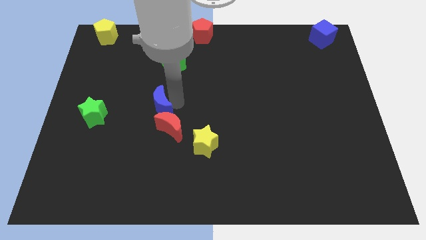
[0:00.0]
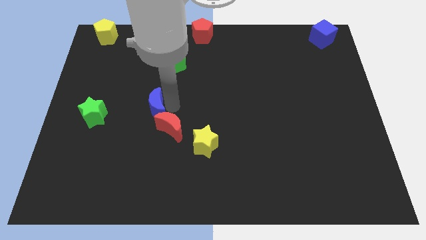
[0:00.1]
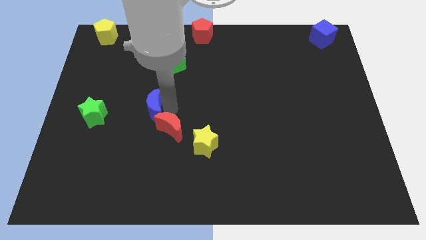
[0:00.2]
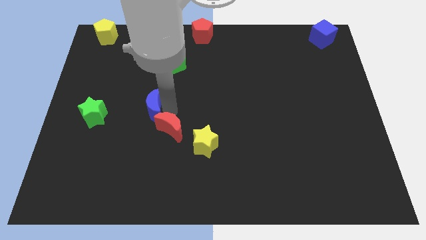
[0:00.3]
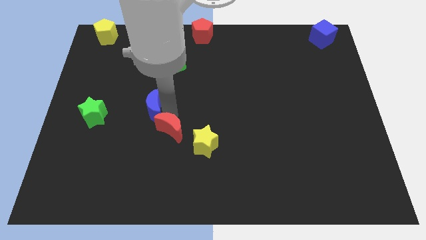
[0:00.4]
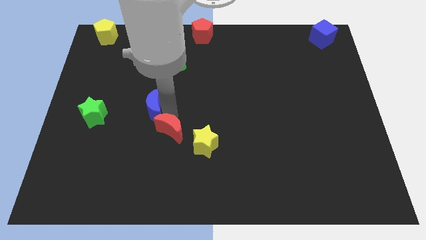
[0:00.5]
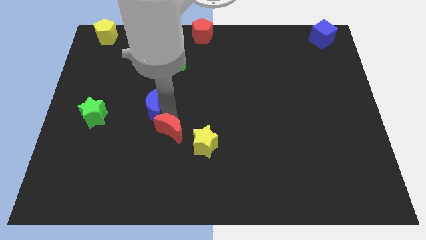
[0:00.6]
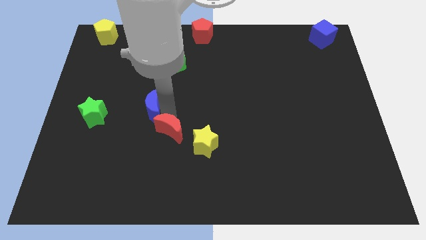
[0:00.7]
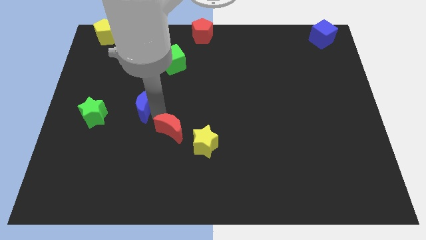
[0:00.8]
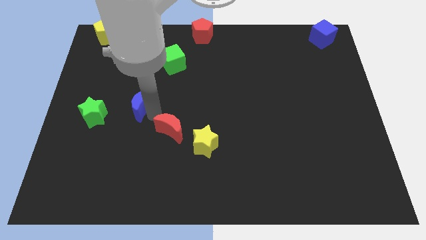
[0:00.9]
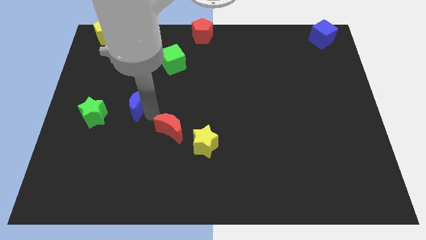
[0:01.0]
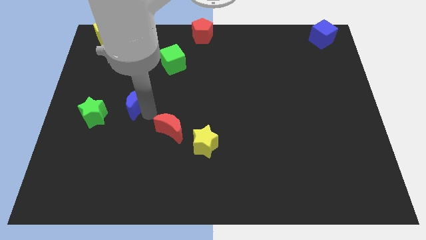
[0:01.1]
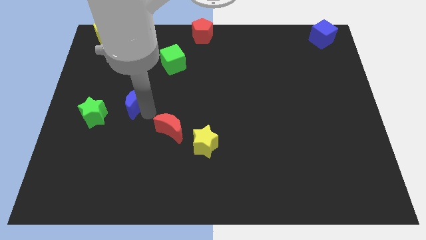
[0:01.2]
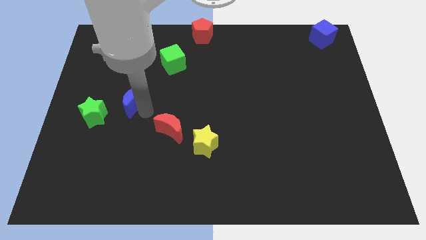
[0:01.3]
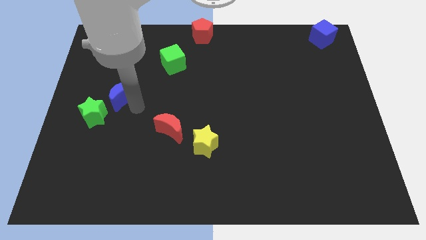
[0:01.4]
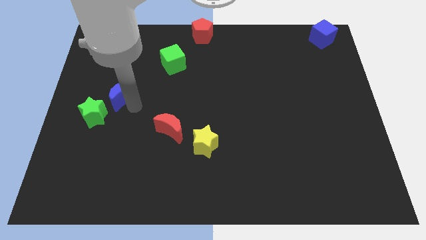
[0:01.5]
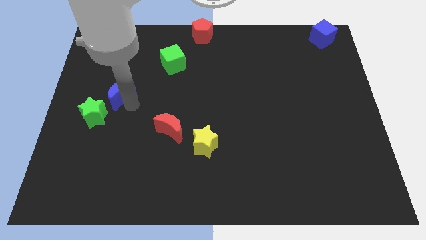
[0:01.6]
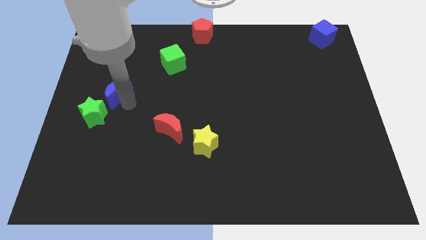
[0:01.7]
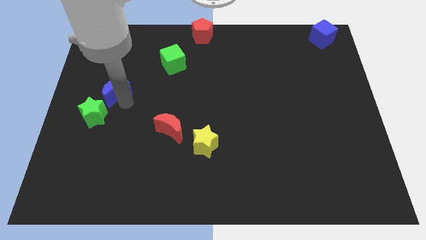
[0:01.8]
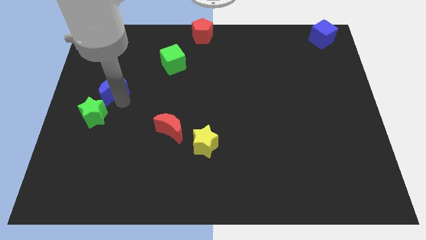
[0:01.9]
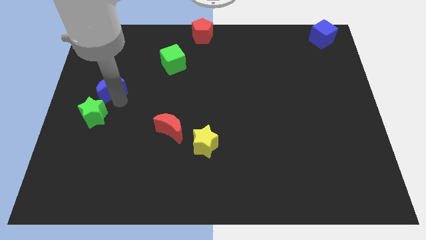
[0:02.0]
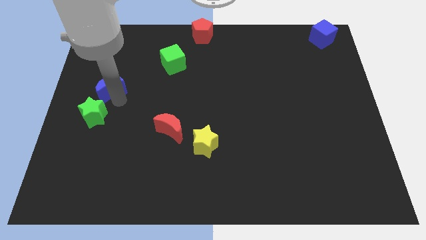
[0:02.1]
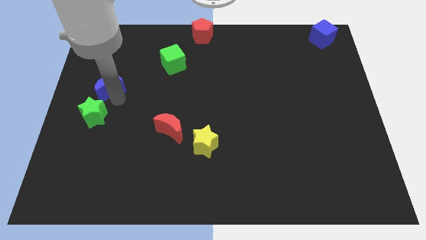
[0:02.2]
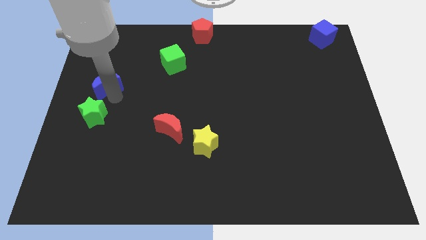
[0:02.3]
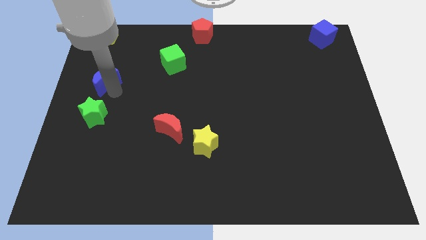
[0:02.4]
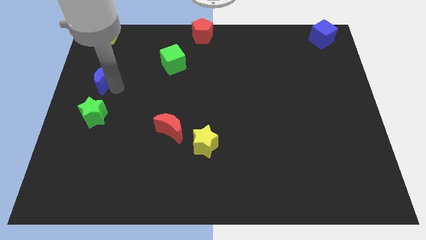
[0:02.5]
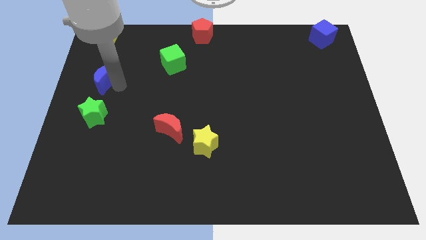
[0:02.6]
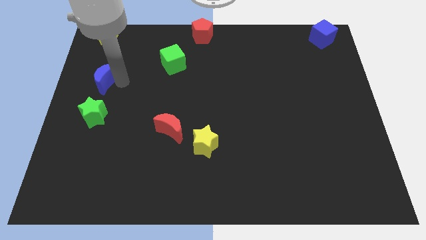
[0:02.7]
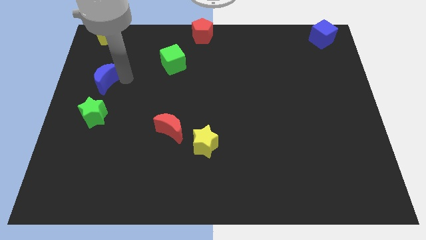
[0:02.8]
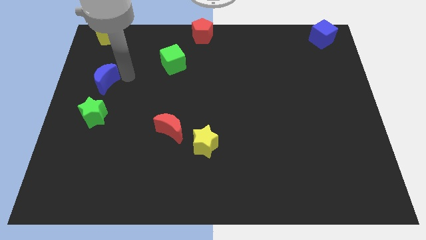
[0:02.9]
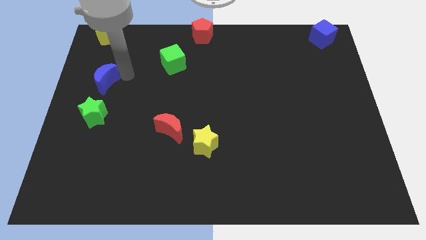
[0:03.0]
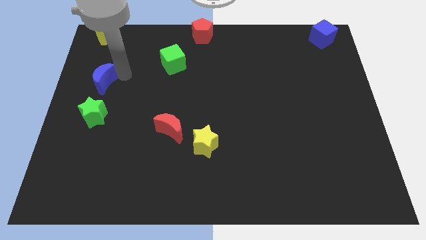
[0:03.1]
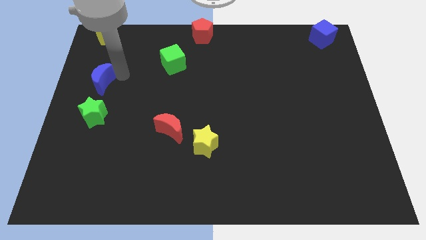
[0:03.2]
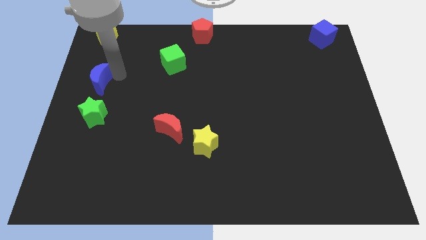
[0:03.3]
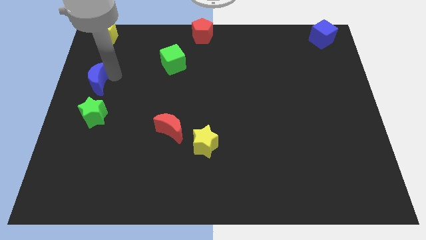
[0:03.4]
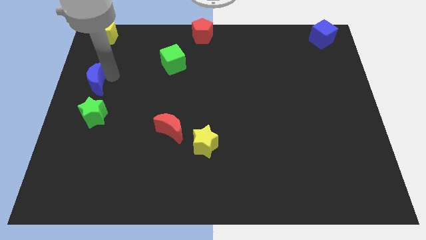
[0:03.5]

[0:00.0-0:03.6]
slide the blue crescent to the top side of the green star

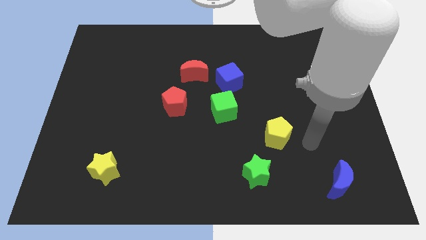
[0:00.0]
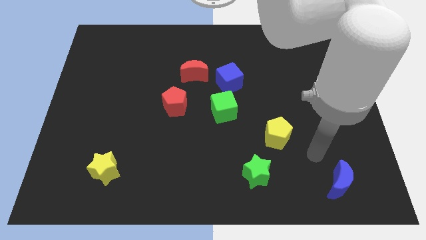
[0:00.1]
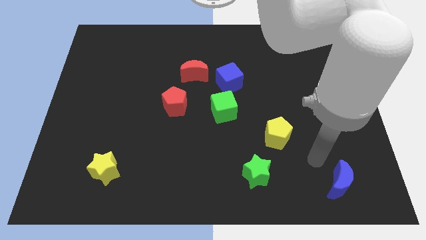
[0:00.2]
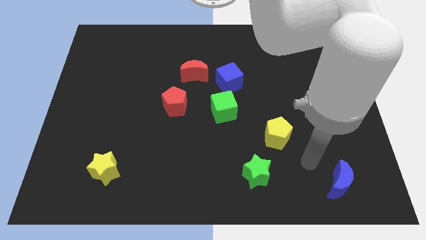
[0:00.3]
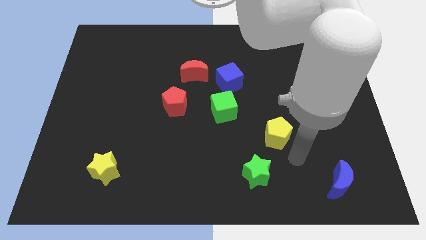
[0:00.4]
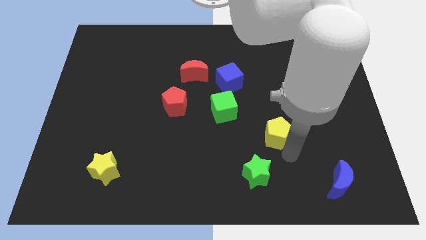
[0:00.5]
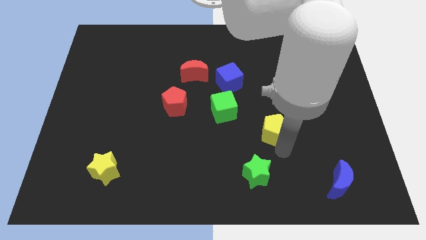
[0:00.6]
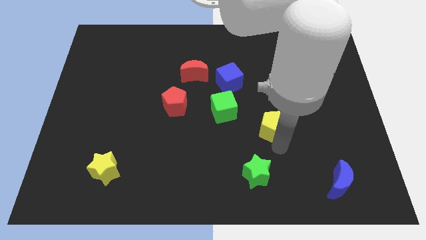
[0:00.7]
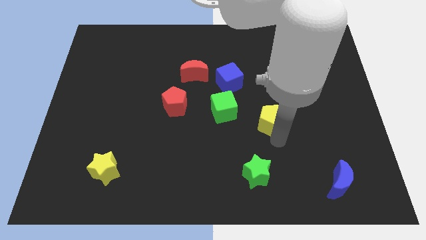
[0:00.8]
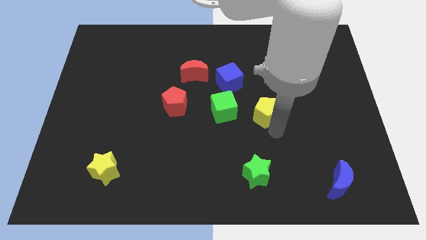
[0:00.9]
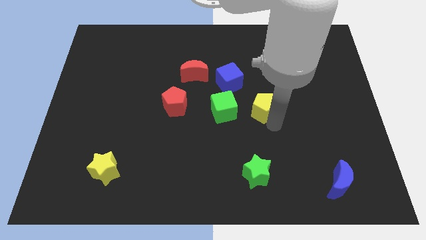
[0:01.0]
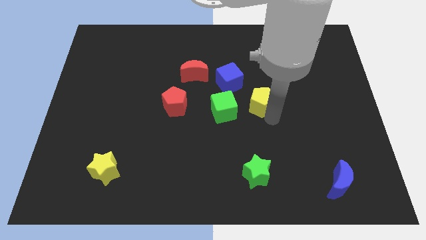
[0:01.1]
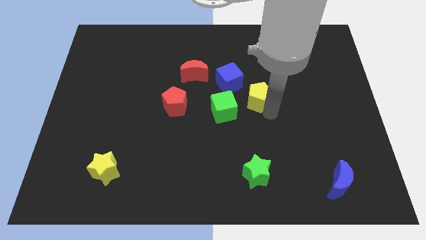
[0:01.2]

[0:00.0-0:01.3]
push the yellow pentagon to the right of the green cube

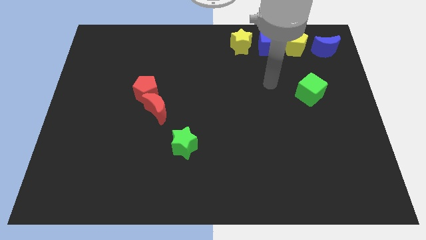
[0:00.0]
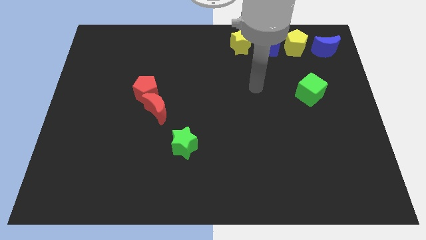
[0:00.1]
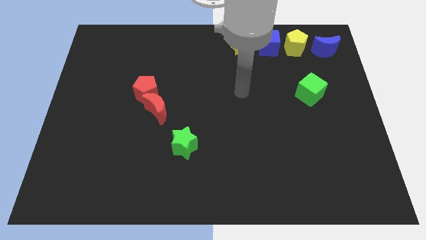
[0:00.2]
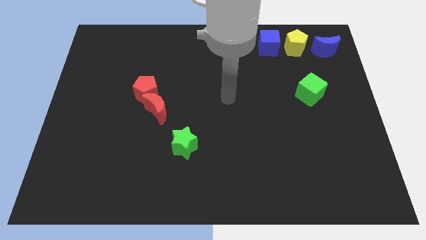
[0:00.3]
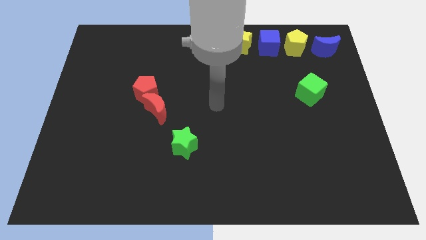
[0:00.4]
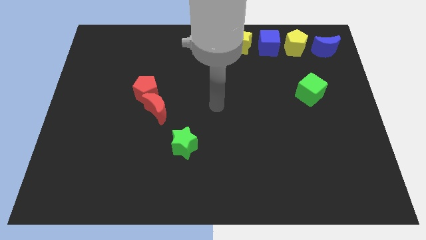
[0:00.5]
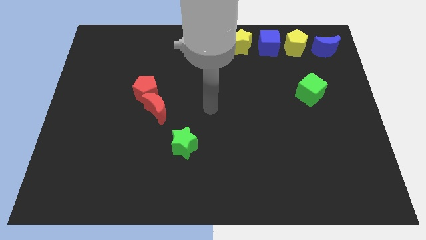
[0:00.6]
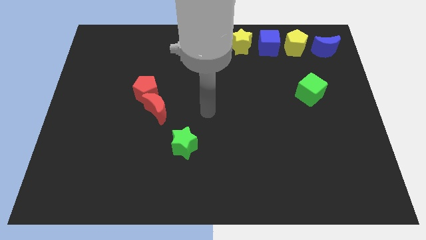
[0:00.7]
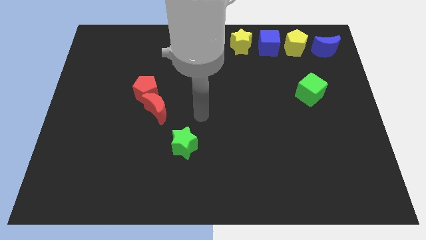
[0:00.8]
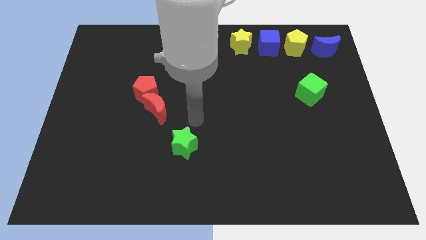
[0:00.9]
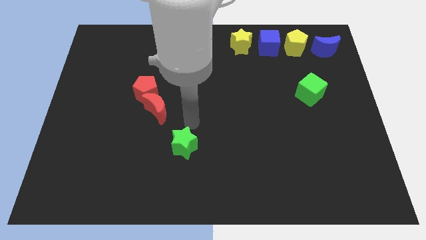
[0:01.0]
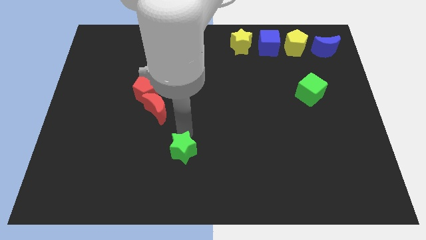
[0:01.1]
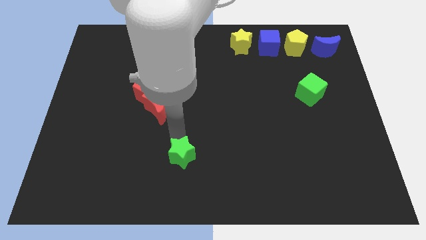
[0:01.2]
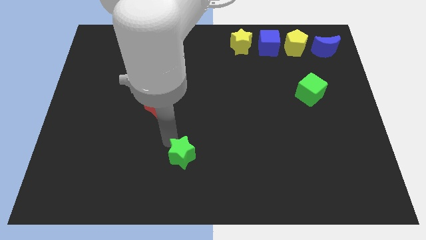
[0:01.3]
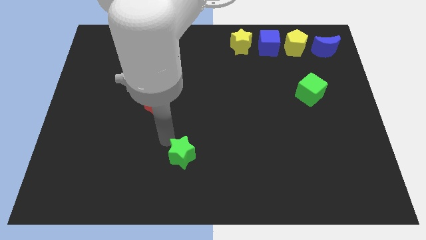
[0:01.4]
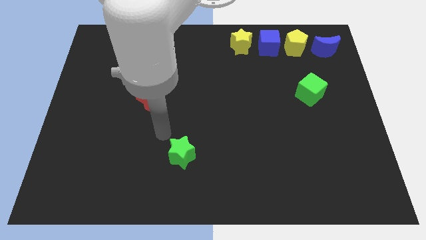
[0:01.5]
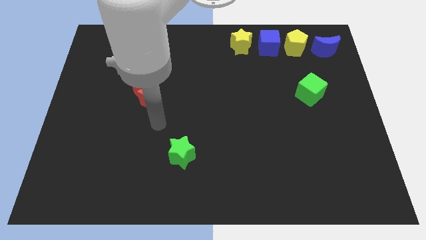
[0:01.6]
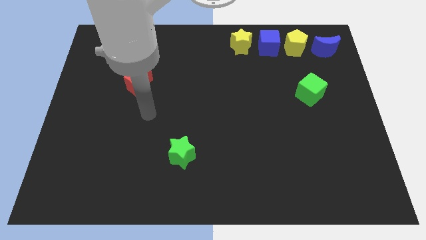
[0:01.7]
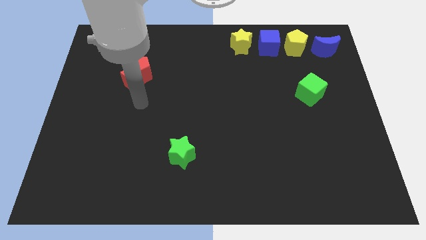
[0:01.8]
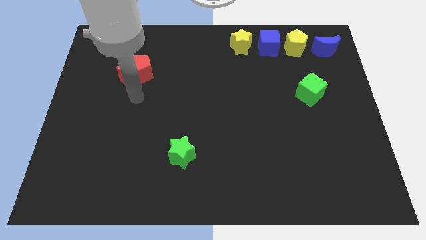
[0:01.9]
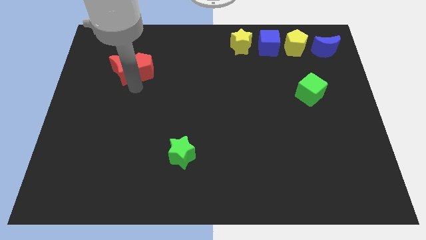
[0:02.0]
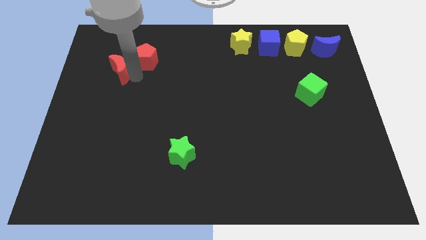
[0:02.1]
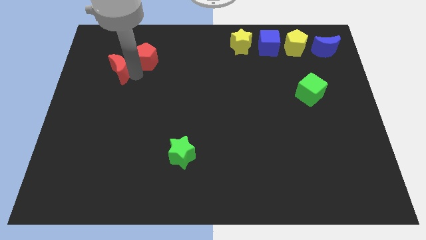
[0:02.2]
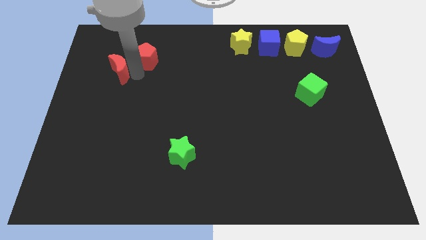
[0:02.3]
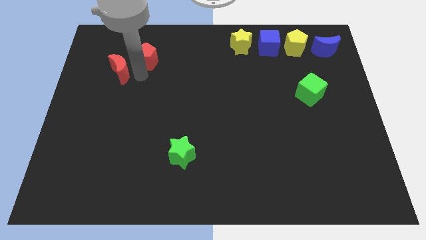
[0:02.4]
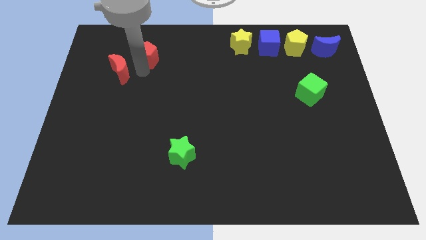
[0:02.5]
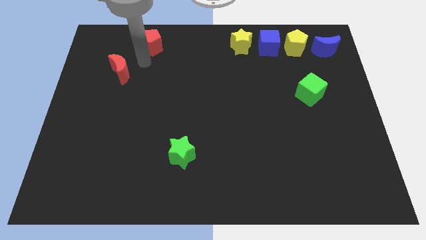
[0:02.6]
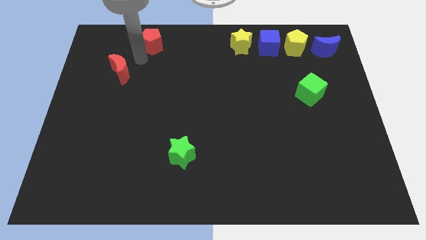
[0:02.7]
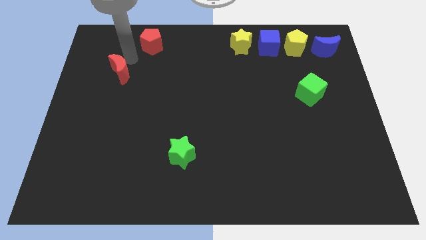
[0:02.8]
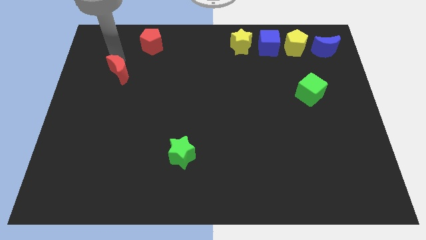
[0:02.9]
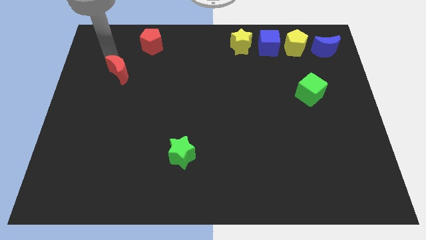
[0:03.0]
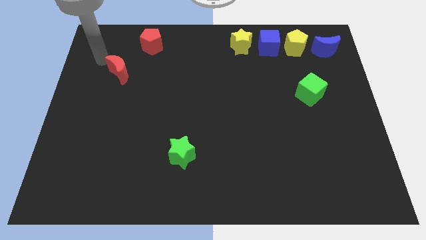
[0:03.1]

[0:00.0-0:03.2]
separate red pentagon and the red moon

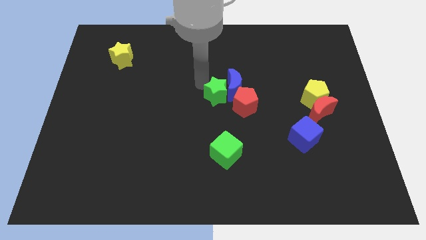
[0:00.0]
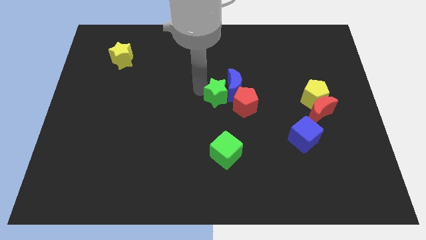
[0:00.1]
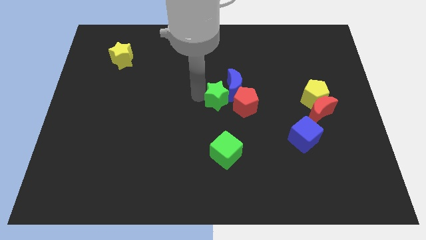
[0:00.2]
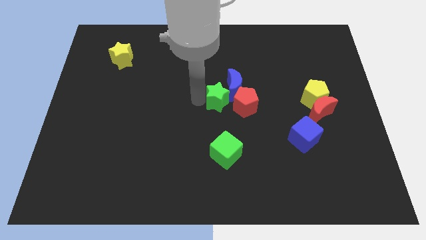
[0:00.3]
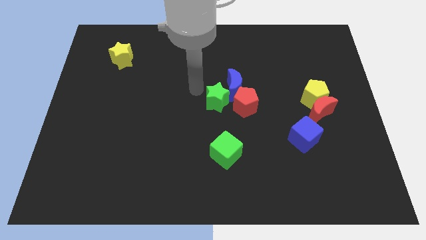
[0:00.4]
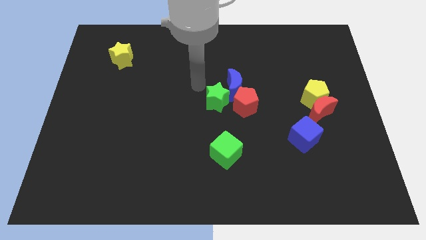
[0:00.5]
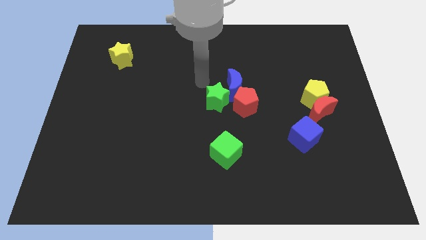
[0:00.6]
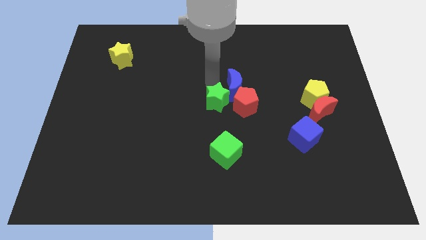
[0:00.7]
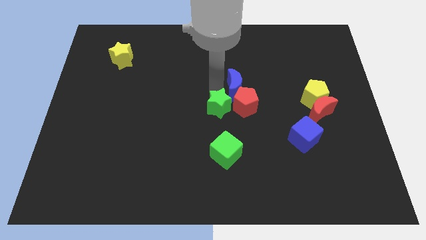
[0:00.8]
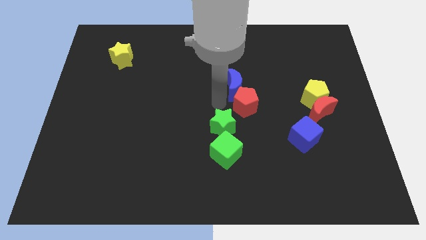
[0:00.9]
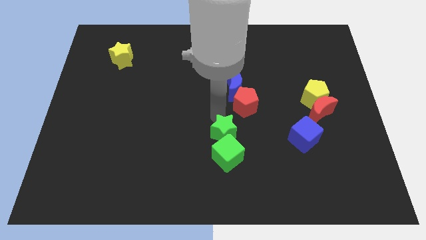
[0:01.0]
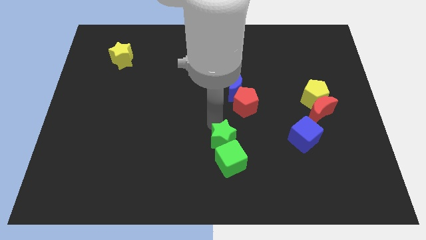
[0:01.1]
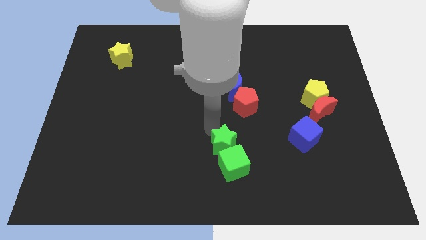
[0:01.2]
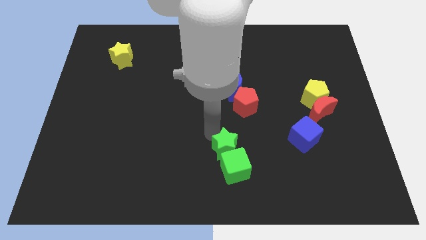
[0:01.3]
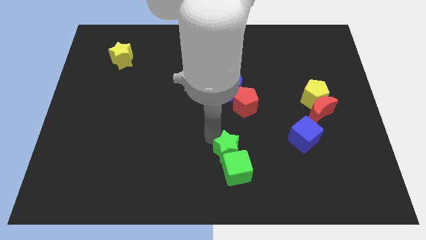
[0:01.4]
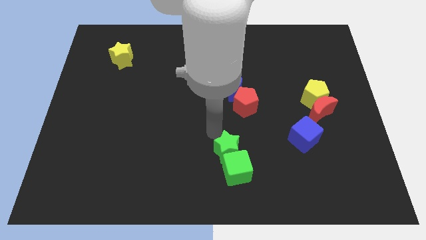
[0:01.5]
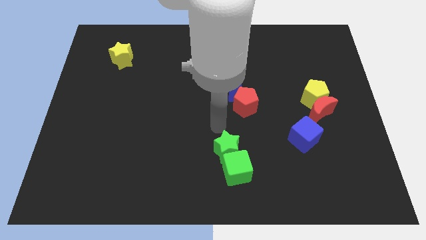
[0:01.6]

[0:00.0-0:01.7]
push the green star into the green cube
